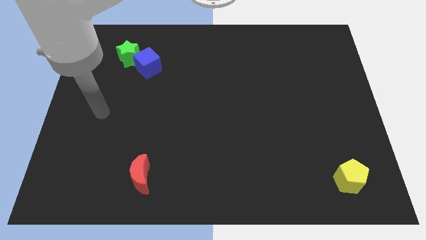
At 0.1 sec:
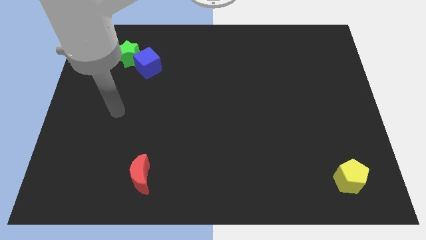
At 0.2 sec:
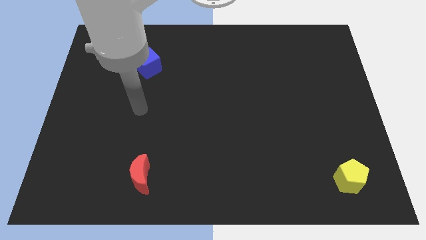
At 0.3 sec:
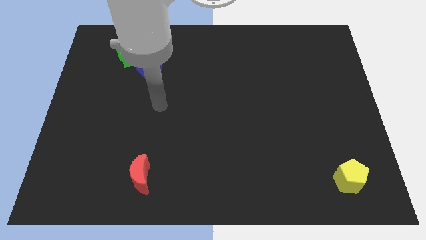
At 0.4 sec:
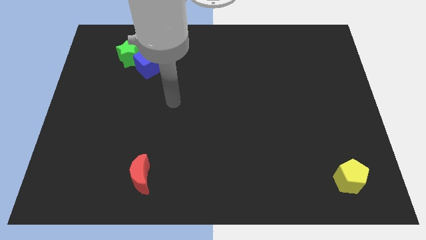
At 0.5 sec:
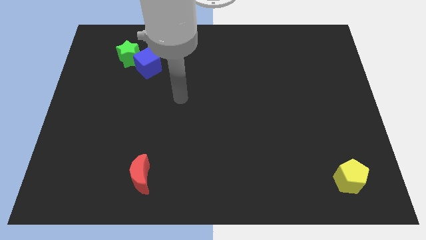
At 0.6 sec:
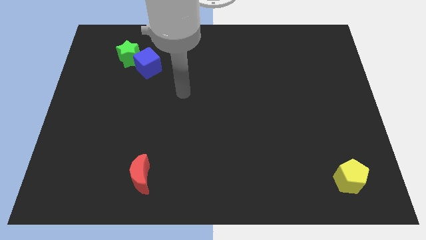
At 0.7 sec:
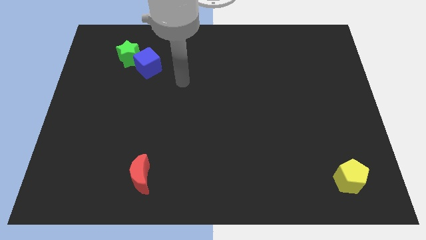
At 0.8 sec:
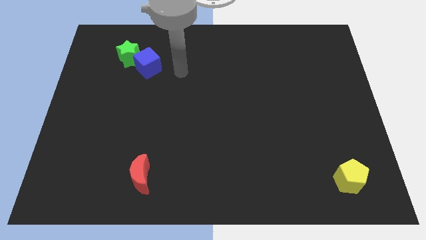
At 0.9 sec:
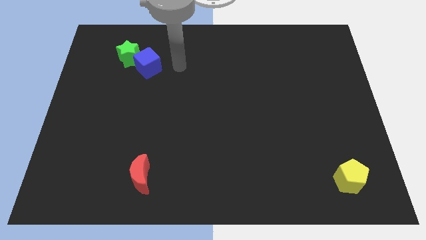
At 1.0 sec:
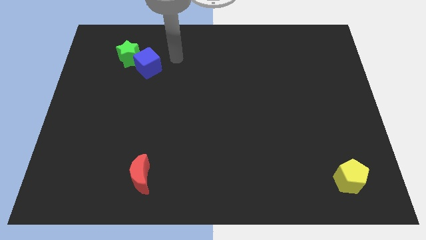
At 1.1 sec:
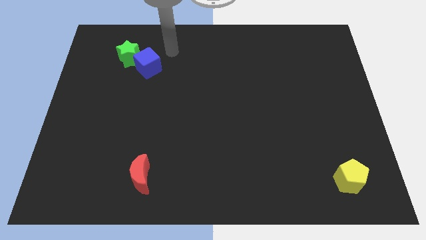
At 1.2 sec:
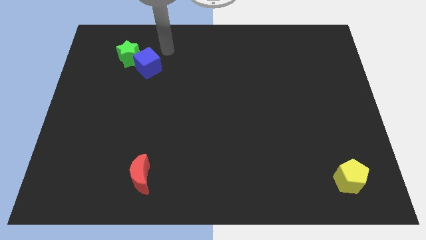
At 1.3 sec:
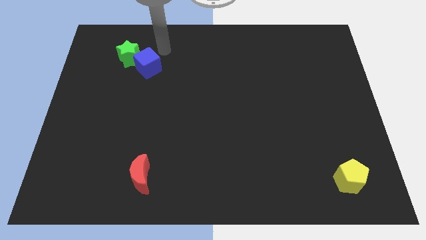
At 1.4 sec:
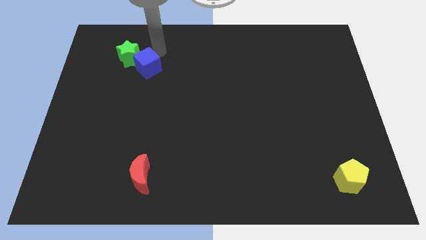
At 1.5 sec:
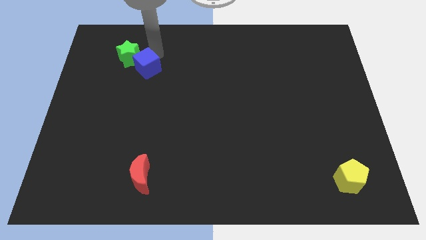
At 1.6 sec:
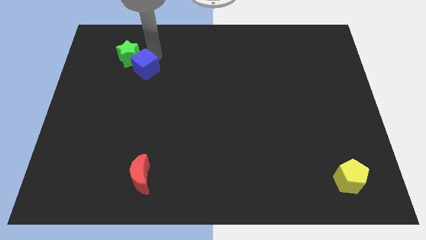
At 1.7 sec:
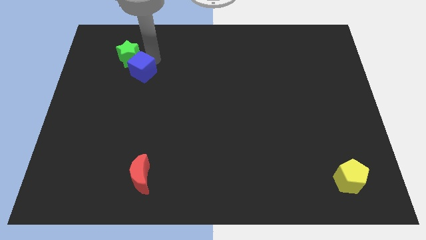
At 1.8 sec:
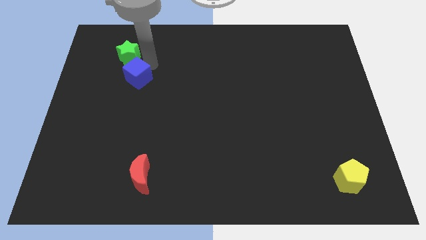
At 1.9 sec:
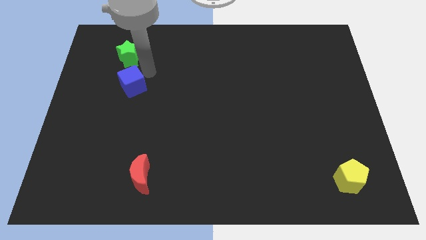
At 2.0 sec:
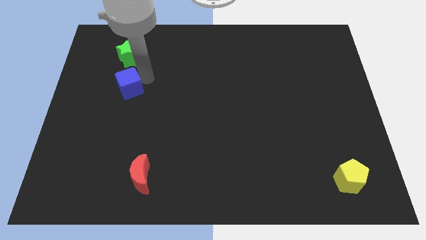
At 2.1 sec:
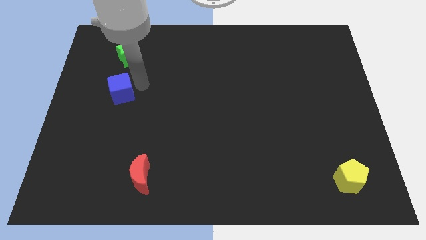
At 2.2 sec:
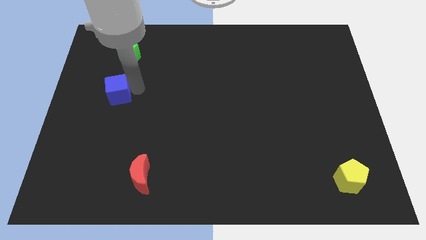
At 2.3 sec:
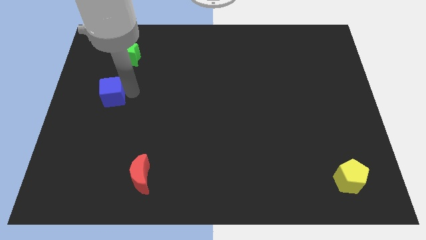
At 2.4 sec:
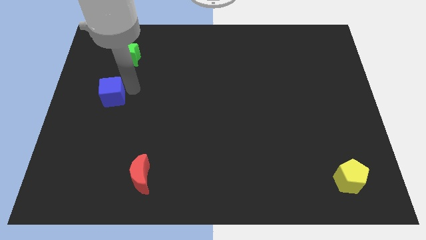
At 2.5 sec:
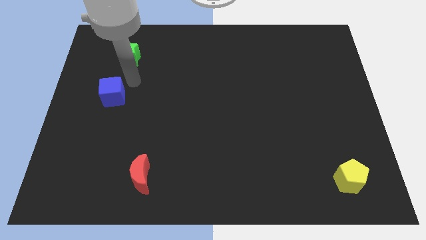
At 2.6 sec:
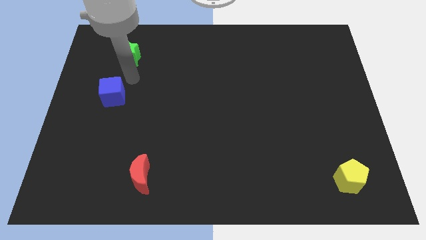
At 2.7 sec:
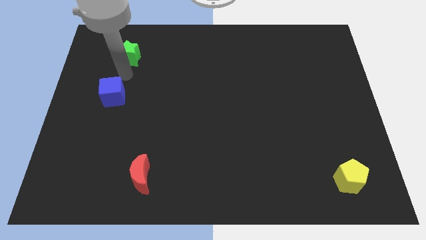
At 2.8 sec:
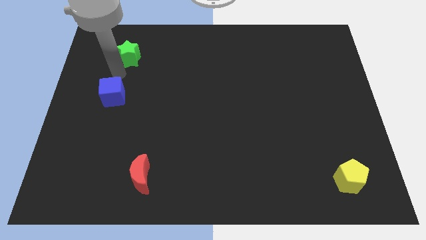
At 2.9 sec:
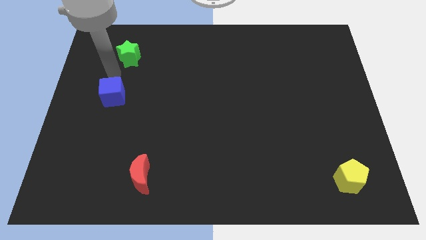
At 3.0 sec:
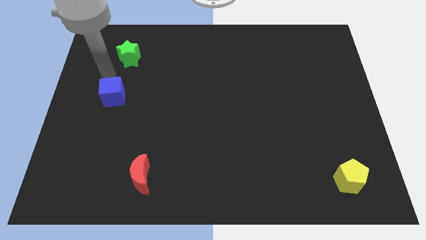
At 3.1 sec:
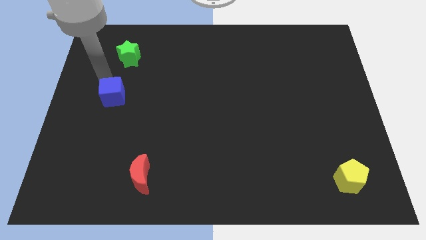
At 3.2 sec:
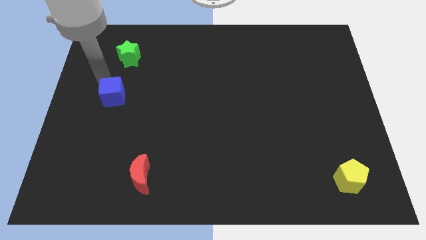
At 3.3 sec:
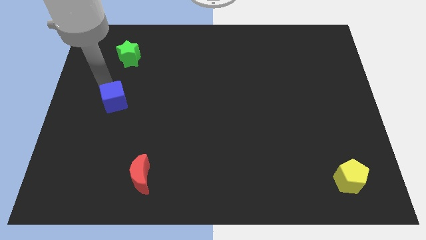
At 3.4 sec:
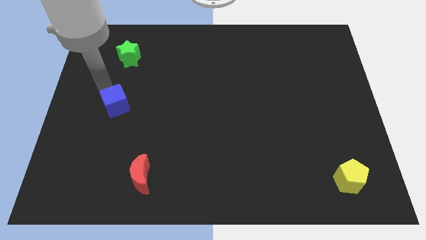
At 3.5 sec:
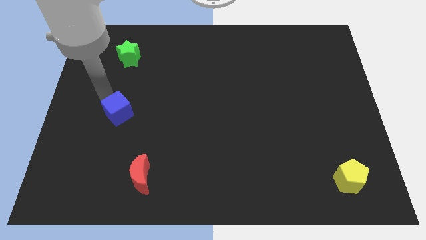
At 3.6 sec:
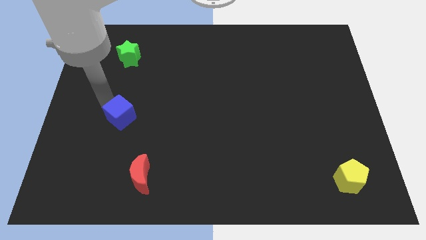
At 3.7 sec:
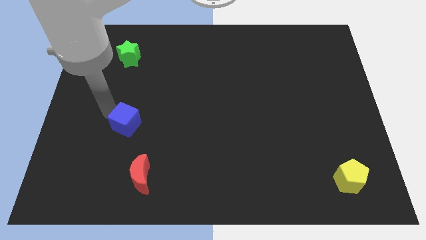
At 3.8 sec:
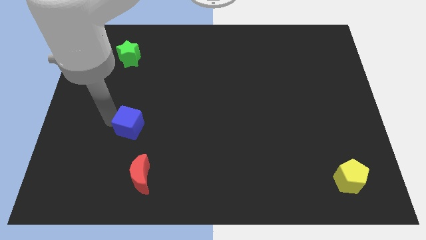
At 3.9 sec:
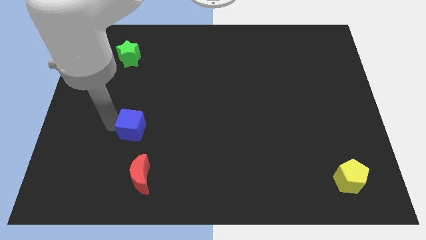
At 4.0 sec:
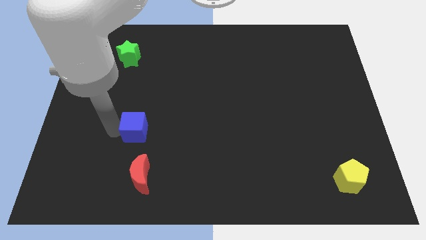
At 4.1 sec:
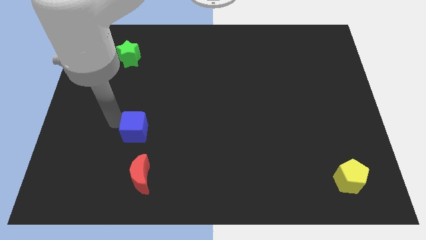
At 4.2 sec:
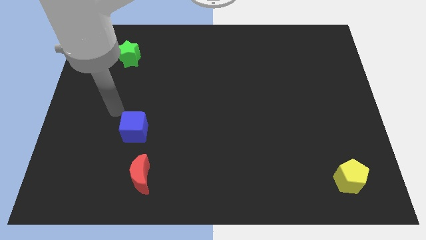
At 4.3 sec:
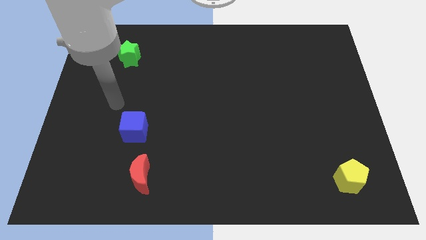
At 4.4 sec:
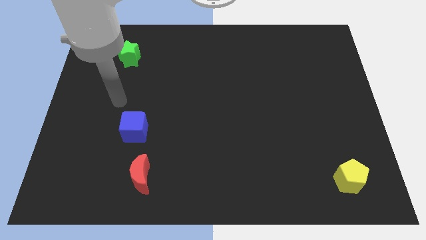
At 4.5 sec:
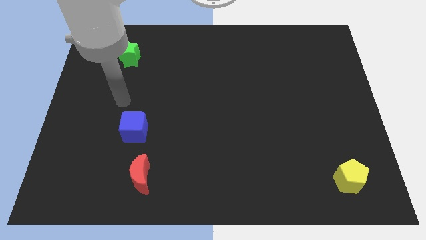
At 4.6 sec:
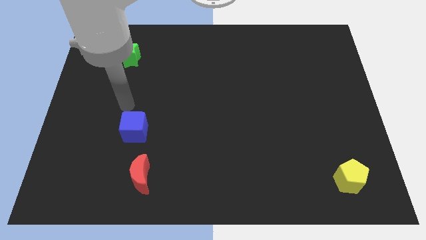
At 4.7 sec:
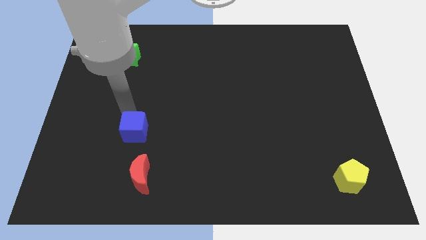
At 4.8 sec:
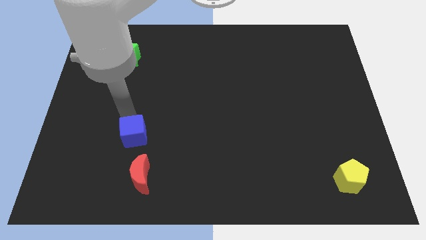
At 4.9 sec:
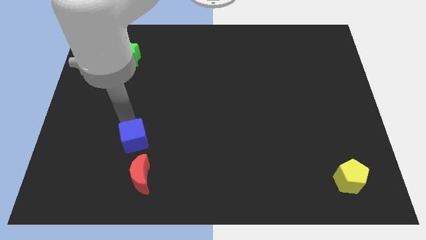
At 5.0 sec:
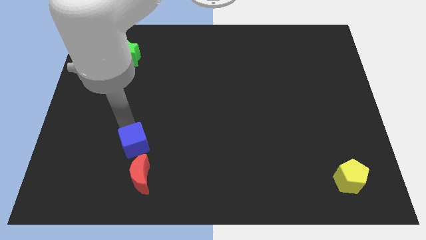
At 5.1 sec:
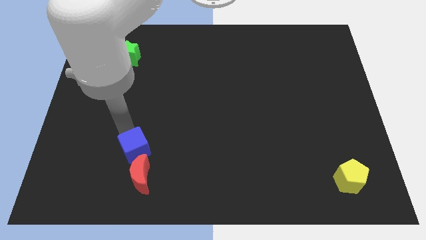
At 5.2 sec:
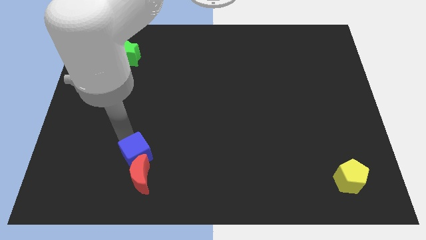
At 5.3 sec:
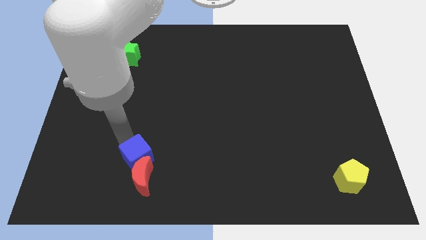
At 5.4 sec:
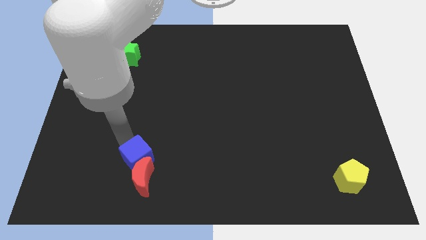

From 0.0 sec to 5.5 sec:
push the cube to the red moon

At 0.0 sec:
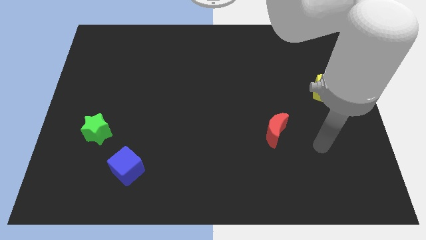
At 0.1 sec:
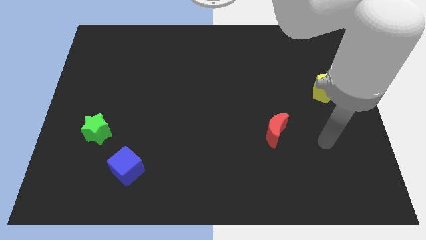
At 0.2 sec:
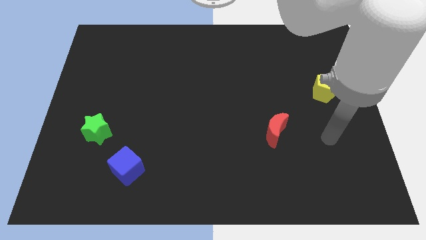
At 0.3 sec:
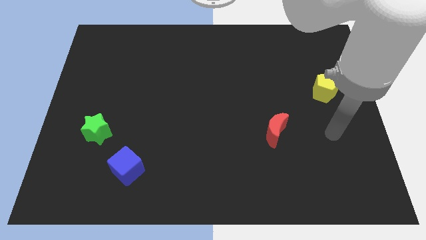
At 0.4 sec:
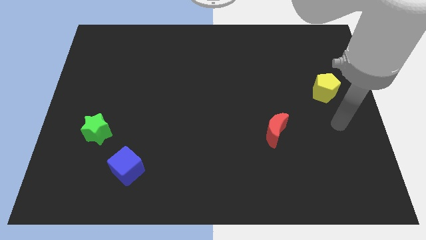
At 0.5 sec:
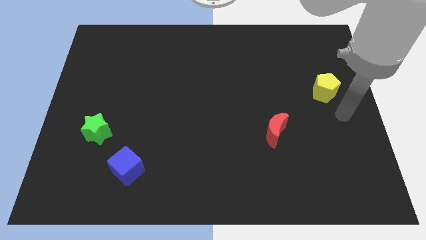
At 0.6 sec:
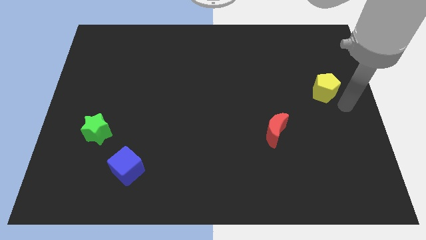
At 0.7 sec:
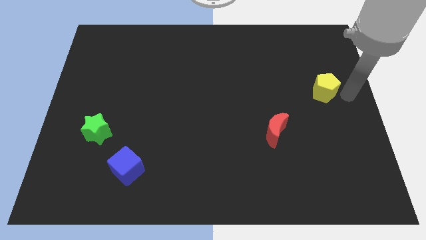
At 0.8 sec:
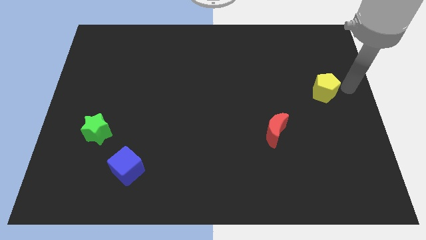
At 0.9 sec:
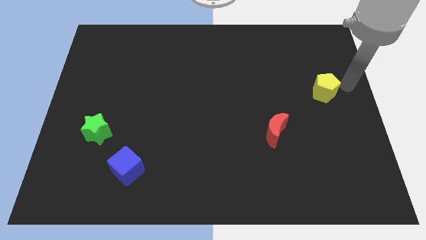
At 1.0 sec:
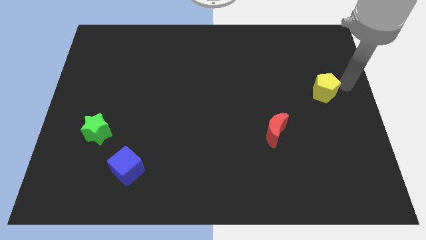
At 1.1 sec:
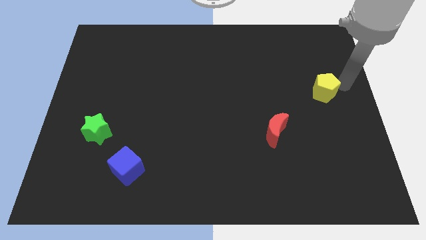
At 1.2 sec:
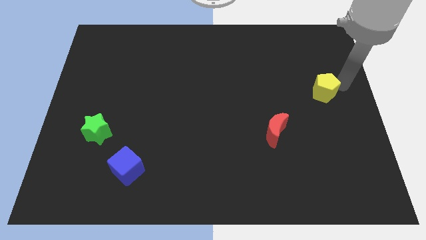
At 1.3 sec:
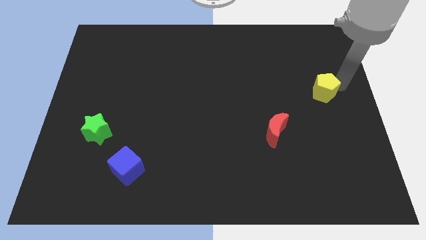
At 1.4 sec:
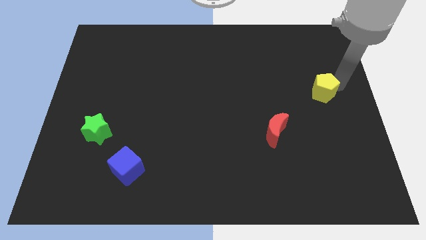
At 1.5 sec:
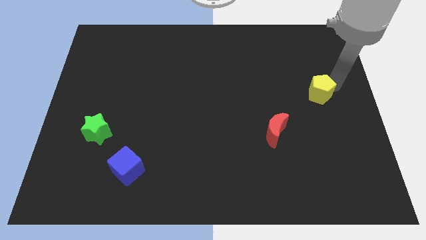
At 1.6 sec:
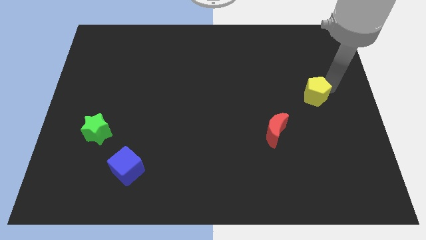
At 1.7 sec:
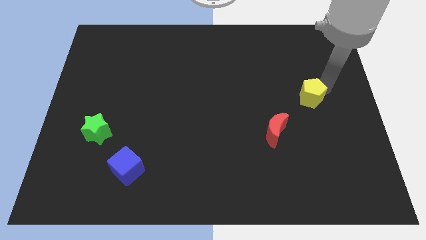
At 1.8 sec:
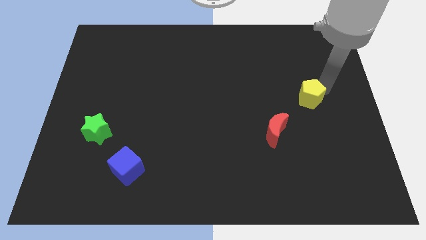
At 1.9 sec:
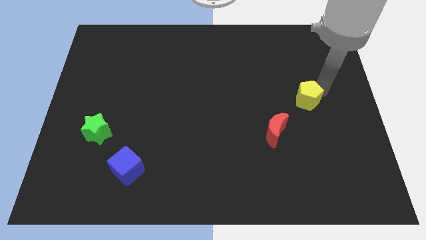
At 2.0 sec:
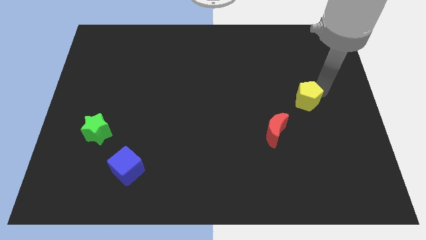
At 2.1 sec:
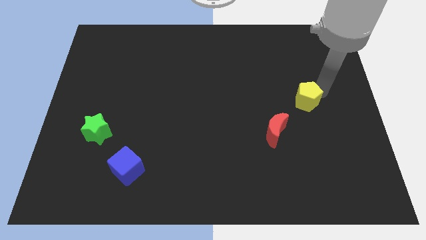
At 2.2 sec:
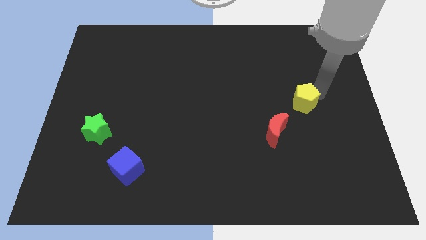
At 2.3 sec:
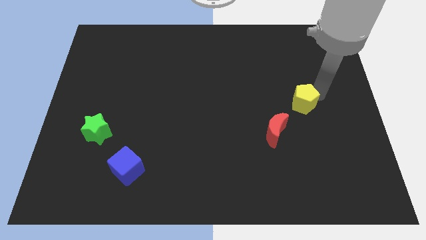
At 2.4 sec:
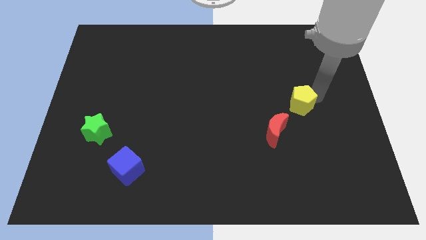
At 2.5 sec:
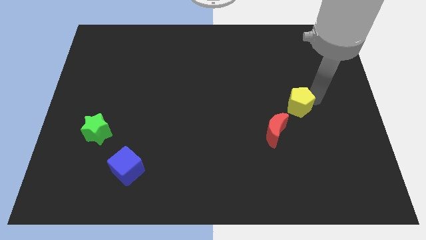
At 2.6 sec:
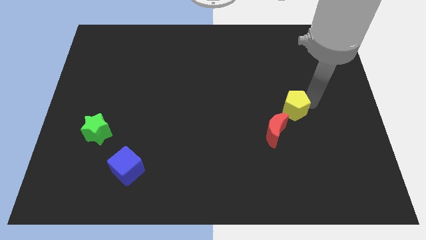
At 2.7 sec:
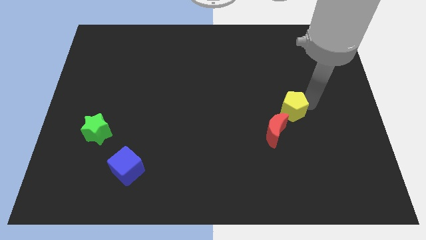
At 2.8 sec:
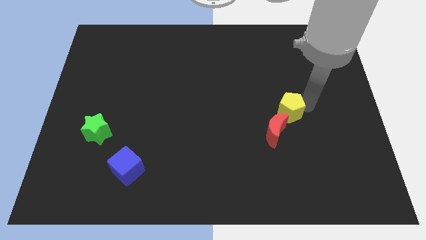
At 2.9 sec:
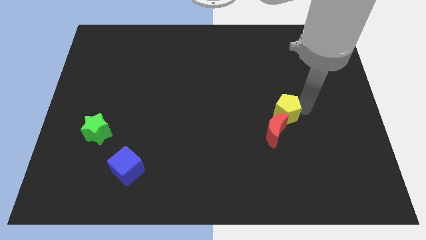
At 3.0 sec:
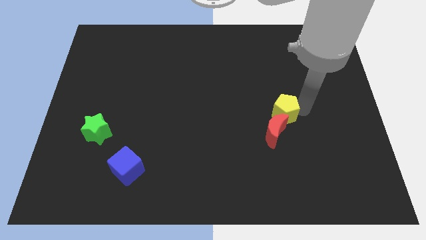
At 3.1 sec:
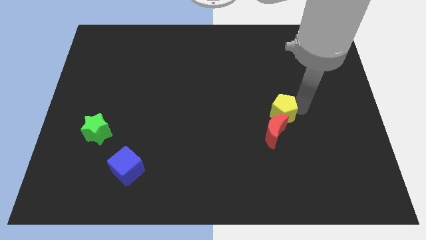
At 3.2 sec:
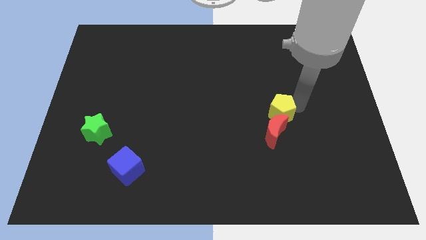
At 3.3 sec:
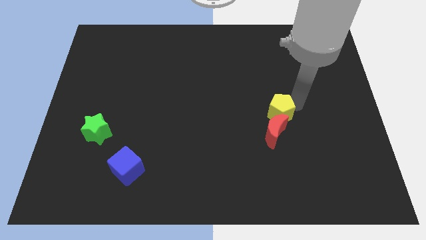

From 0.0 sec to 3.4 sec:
push the yellow pentagon close to the red moon

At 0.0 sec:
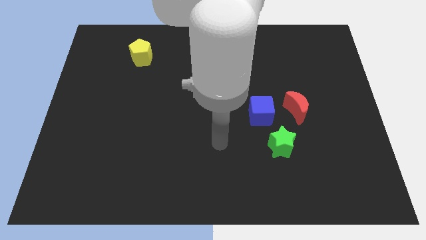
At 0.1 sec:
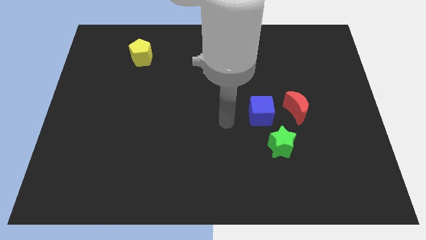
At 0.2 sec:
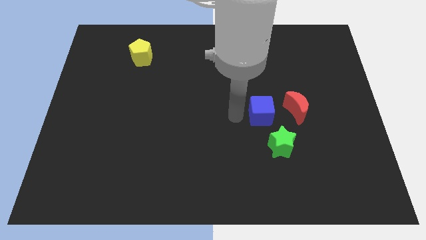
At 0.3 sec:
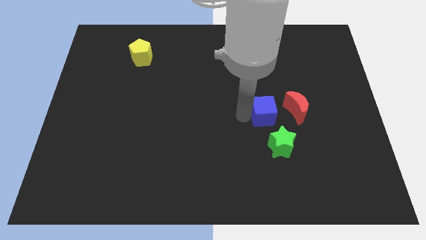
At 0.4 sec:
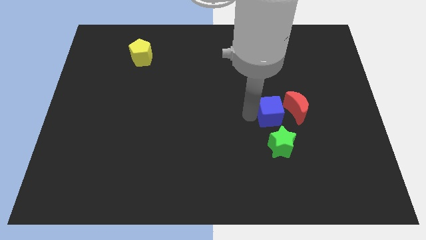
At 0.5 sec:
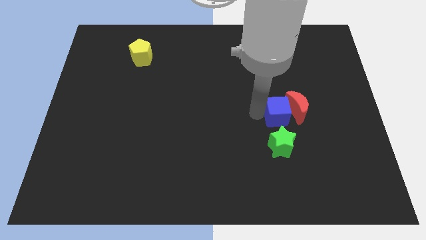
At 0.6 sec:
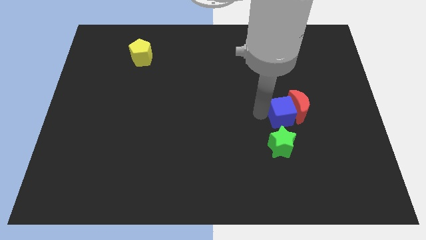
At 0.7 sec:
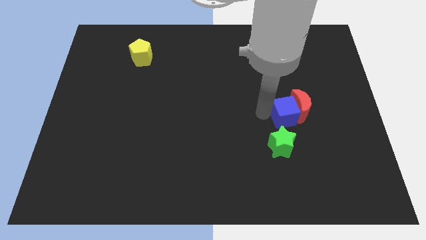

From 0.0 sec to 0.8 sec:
move the blue block next to the red block
